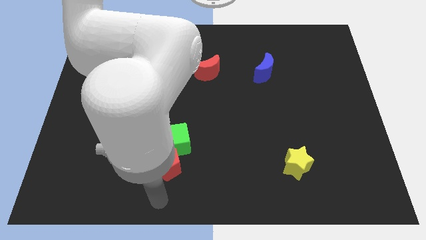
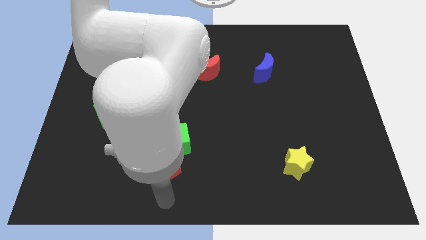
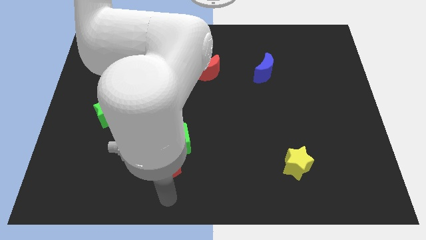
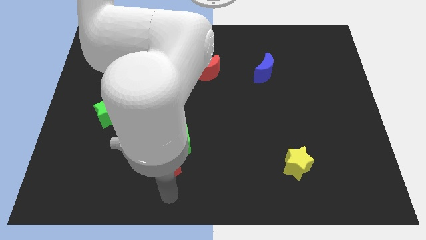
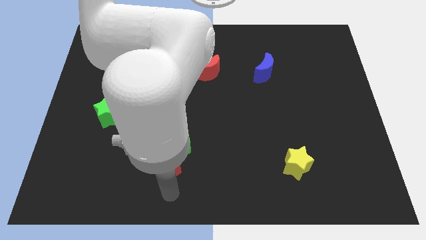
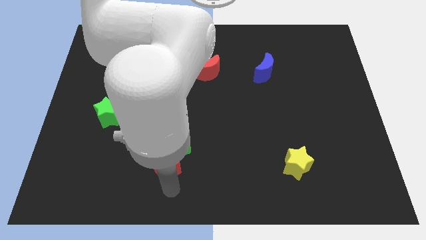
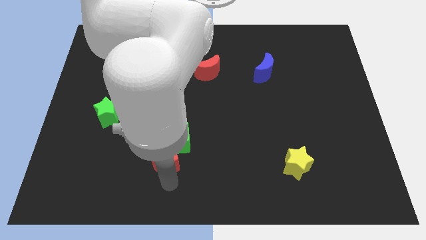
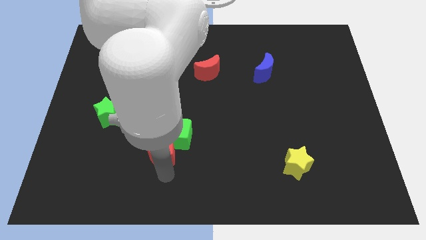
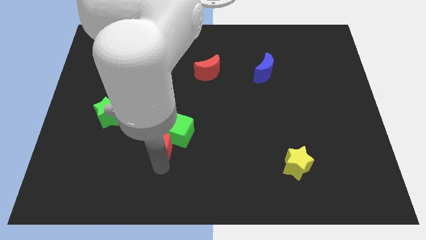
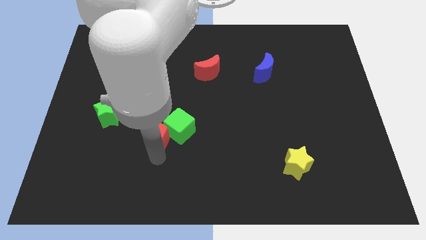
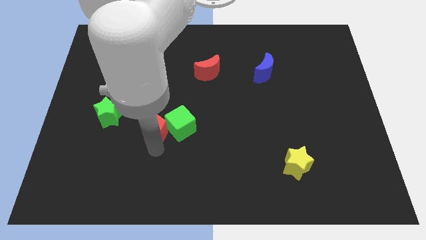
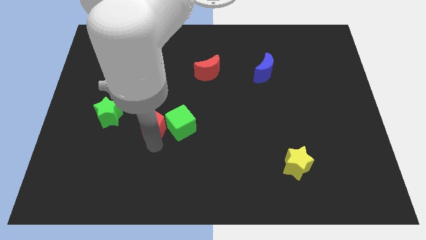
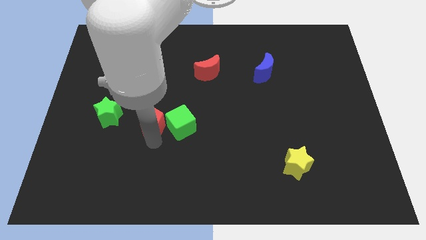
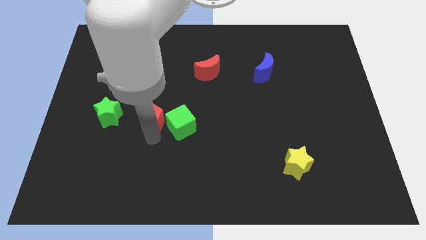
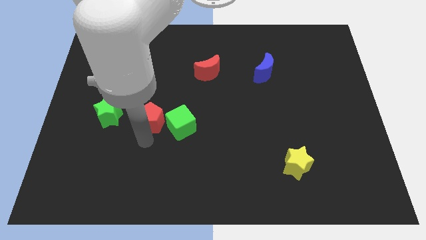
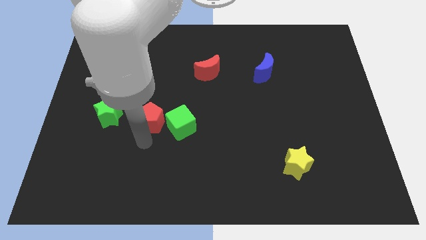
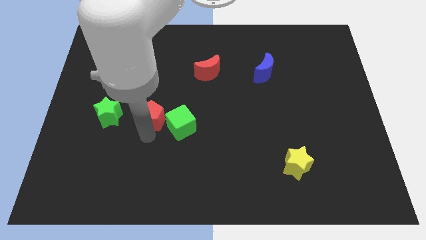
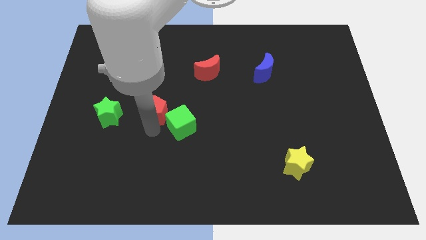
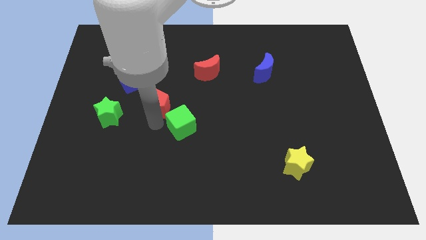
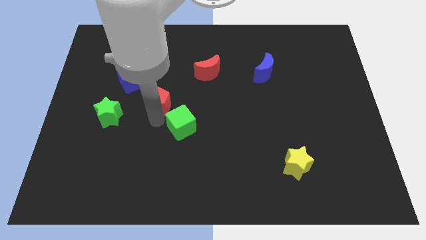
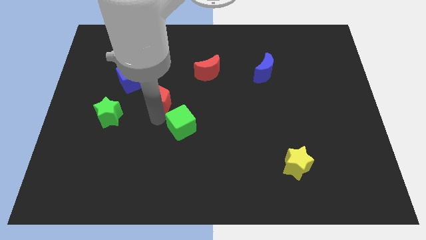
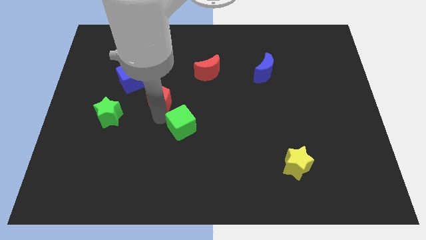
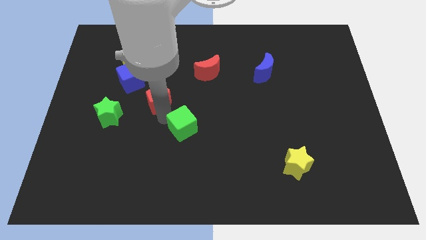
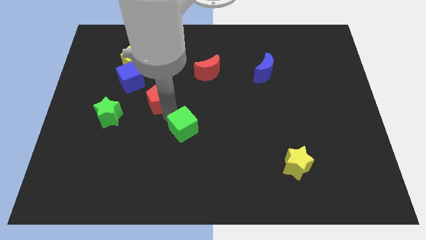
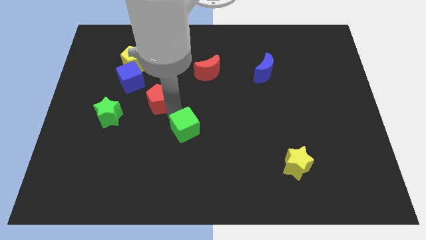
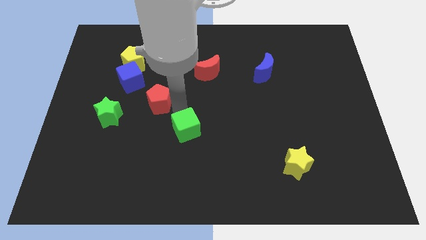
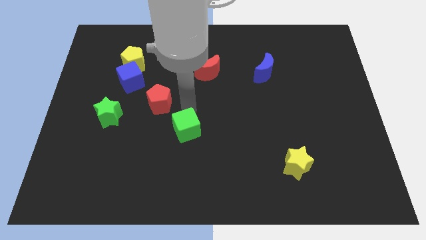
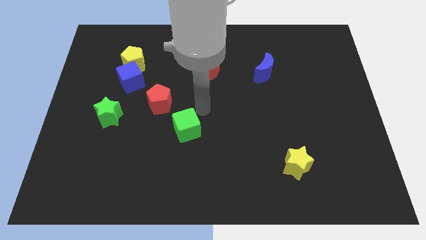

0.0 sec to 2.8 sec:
move red pentagon diagonally left above green cube

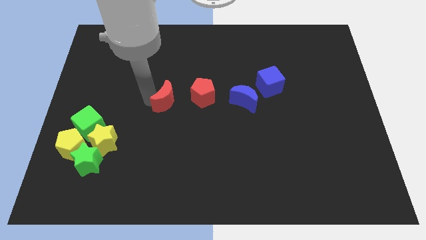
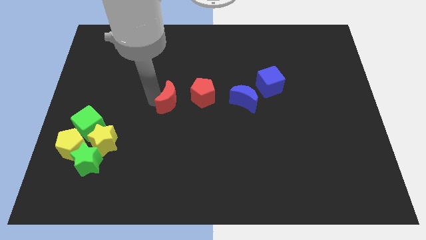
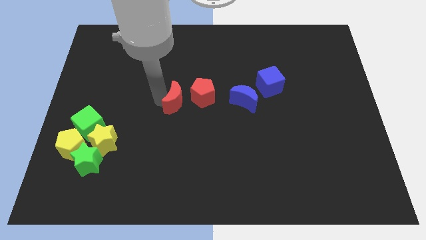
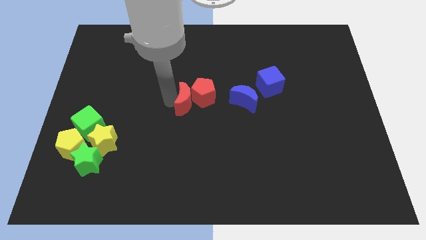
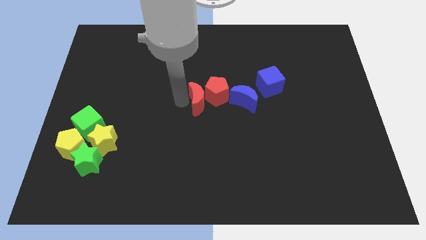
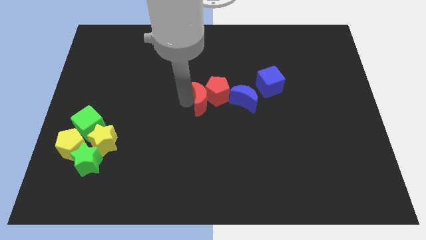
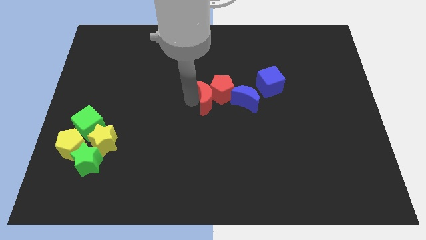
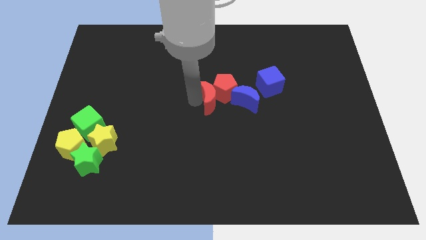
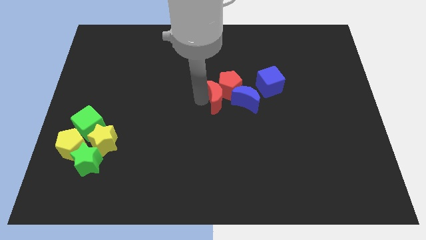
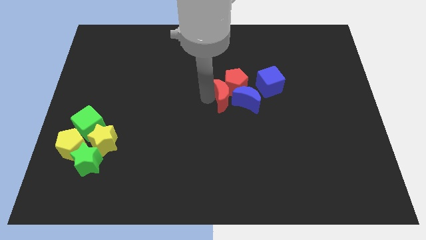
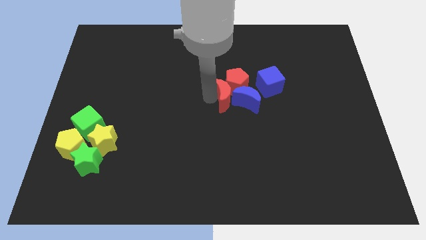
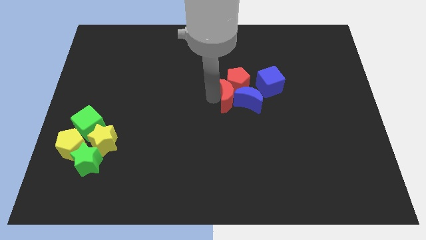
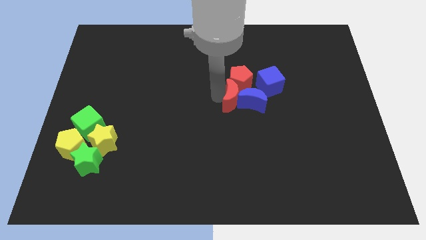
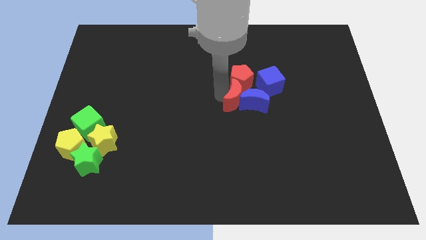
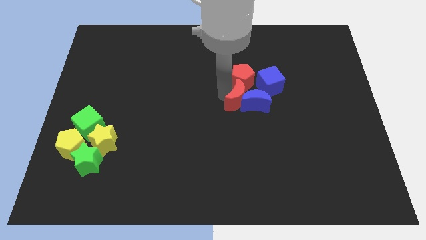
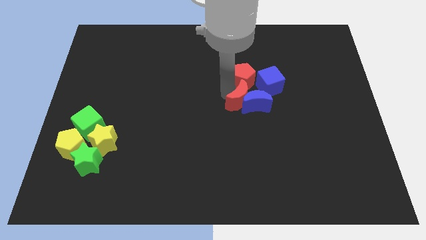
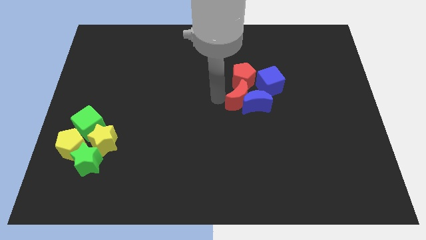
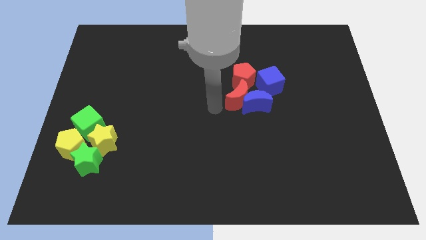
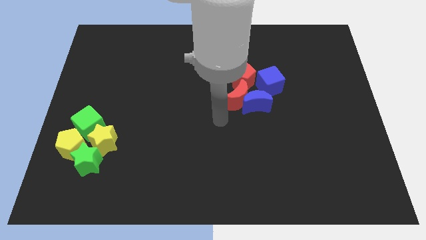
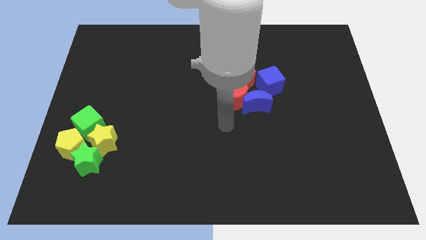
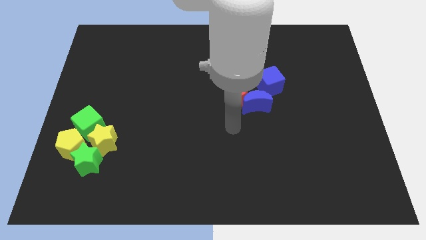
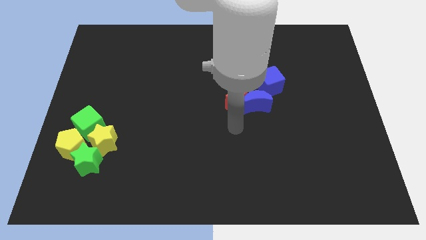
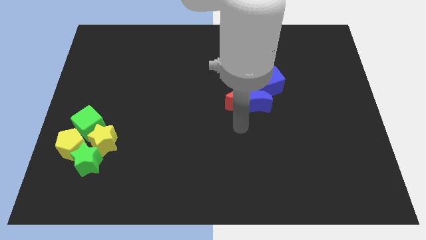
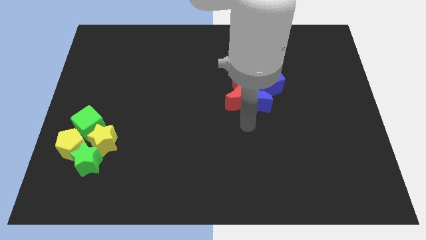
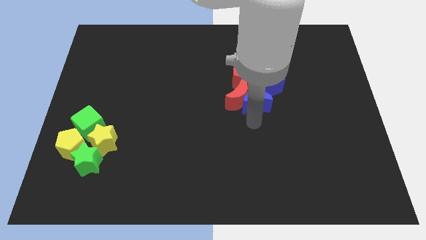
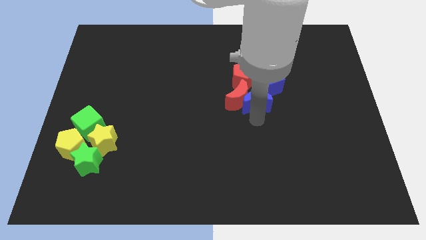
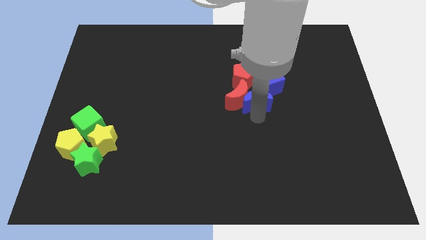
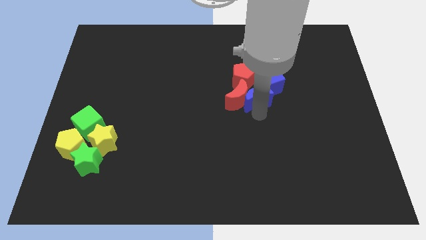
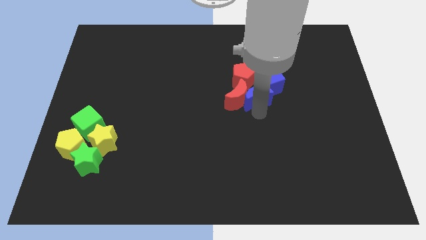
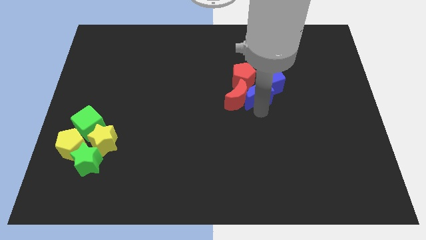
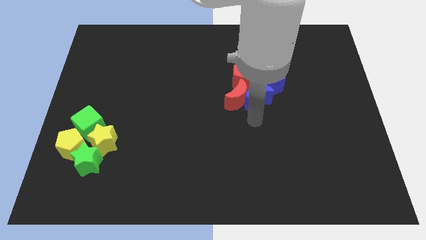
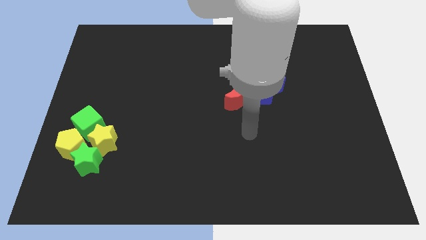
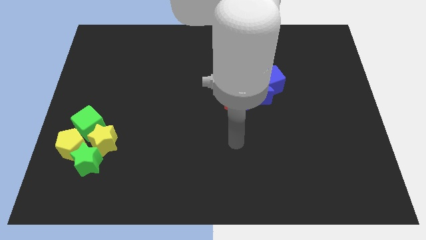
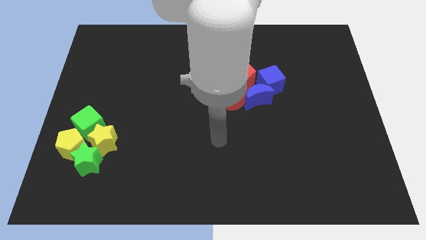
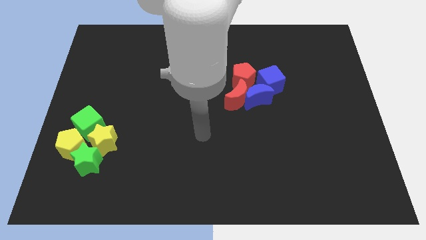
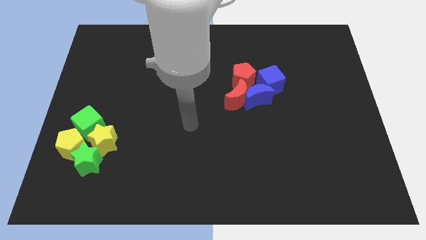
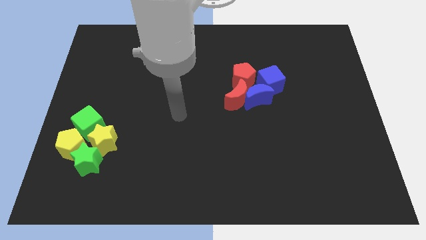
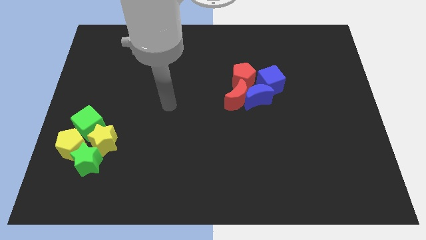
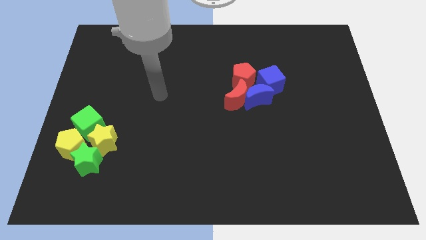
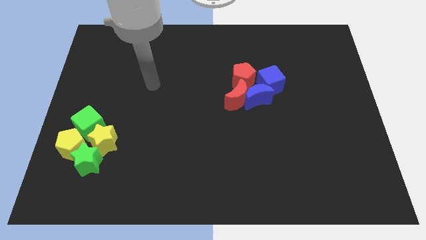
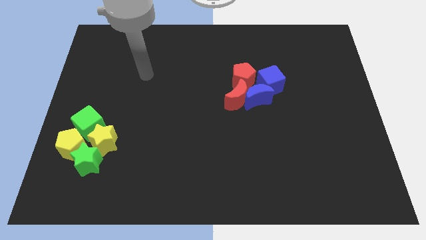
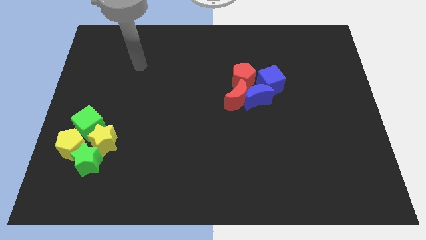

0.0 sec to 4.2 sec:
add red blocks and blue moon to the blue cube

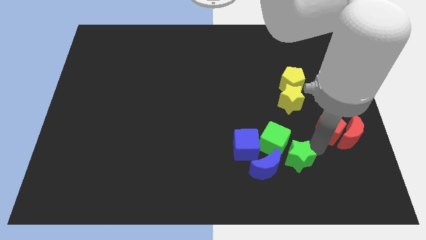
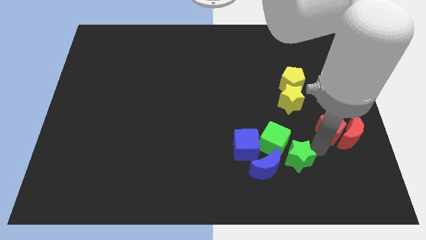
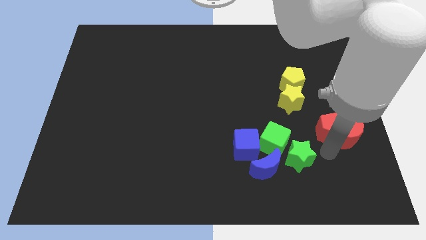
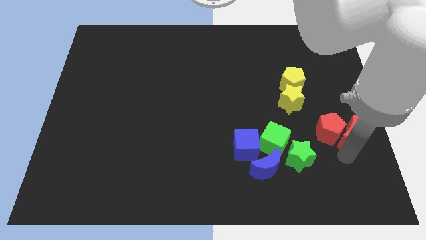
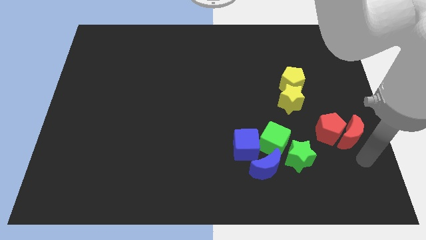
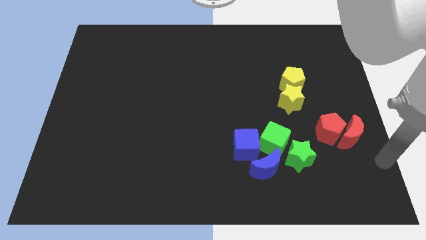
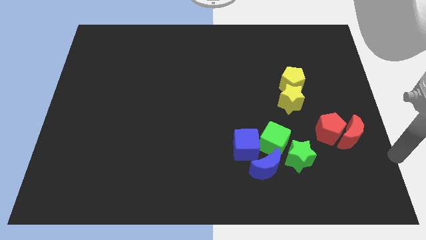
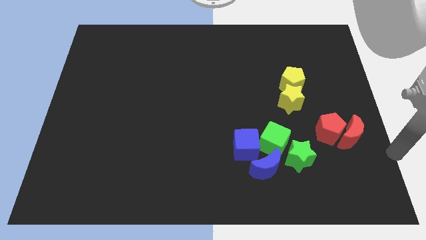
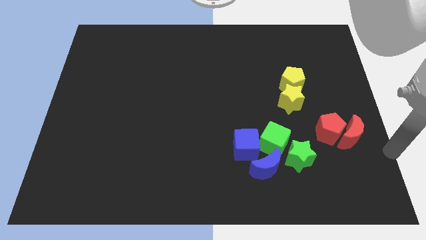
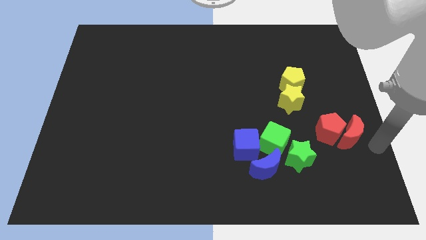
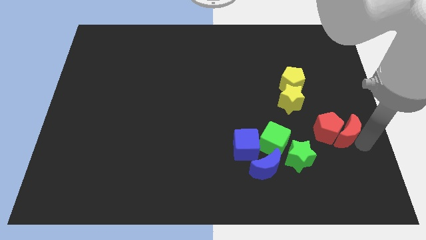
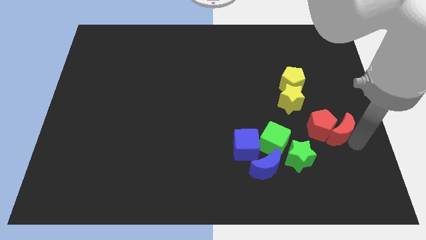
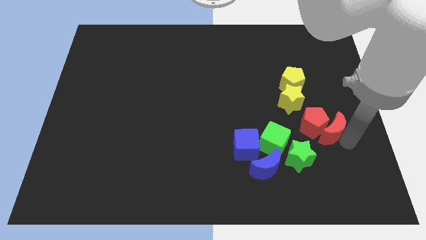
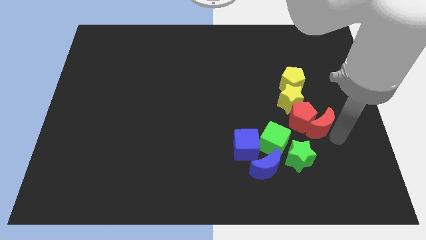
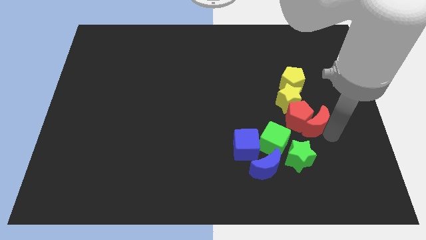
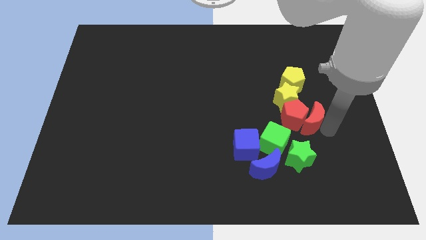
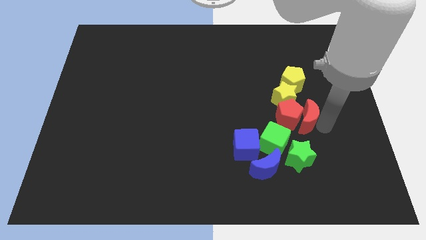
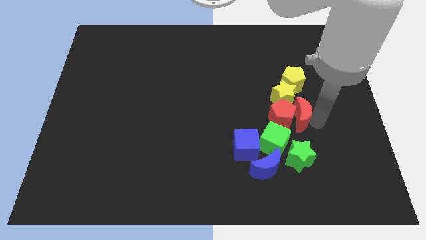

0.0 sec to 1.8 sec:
move the red blocks into the yellow star
